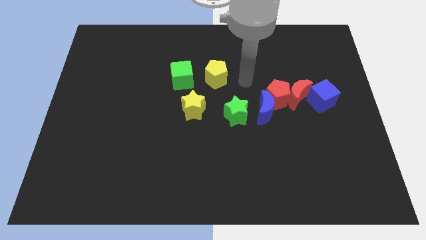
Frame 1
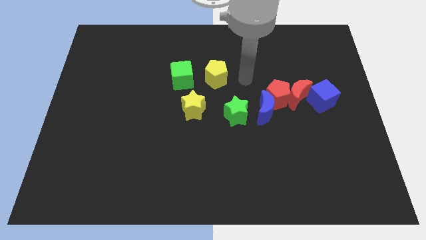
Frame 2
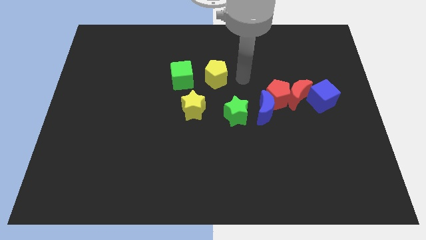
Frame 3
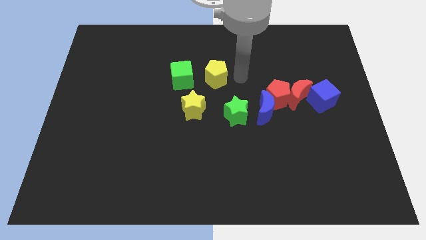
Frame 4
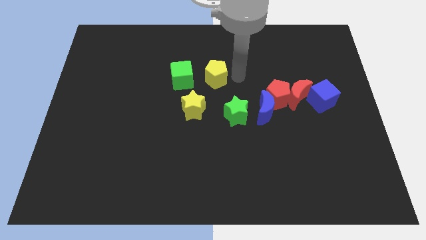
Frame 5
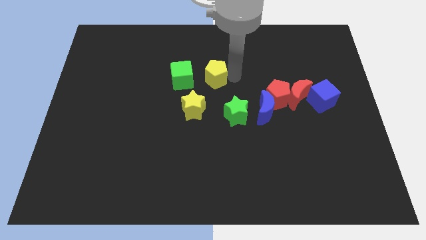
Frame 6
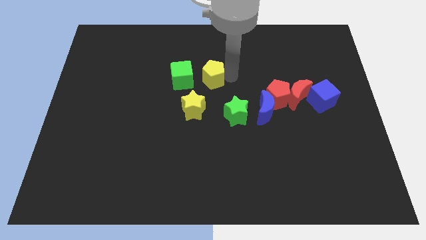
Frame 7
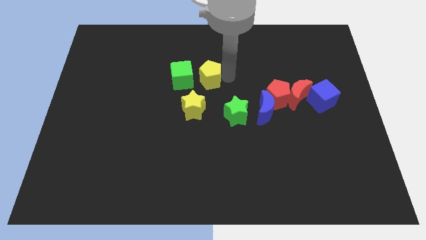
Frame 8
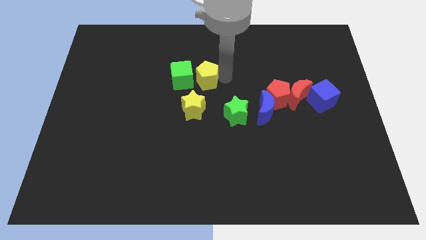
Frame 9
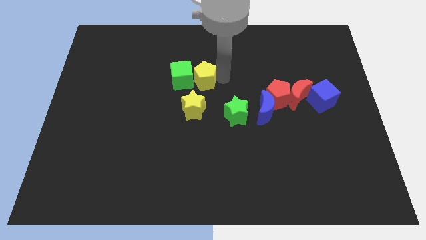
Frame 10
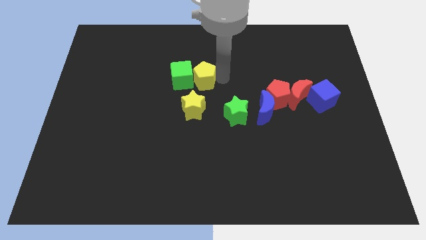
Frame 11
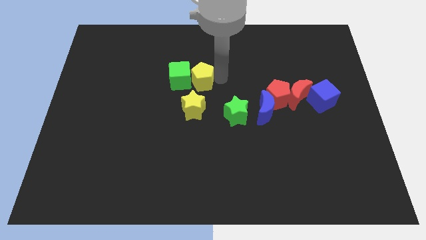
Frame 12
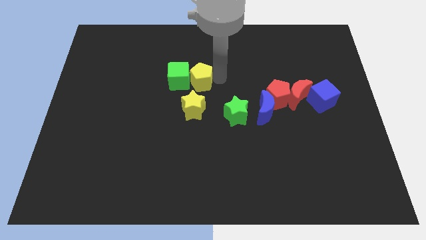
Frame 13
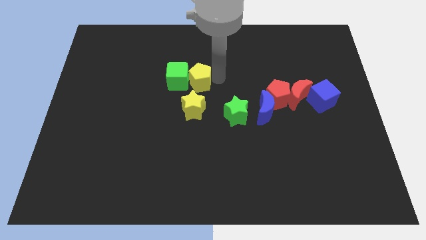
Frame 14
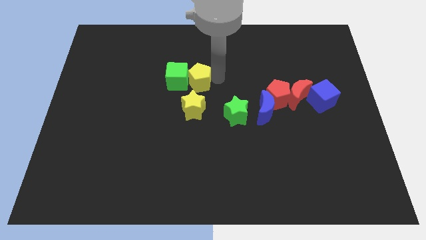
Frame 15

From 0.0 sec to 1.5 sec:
move the yellow pentagon into the green cube

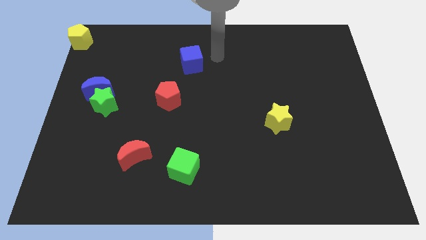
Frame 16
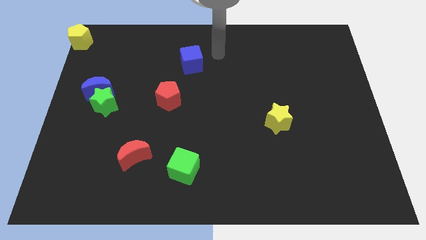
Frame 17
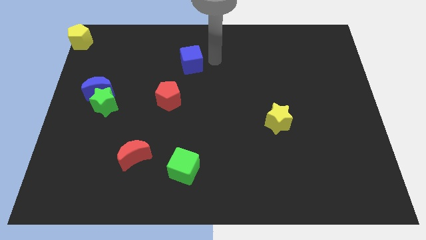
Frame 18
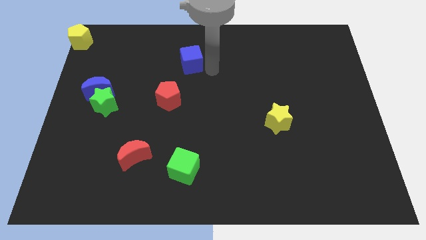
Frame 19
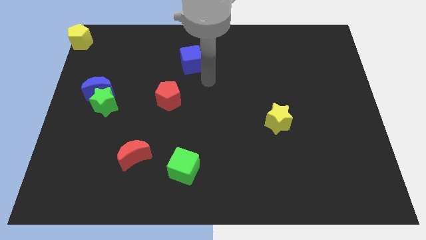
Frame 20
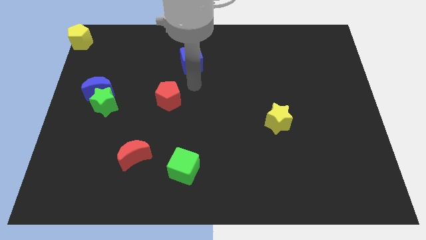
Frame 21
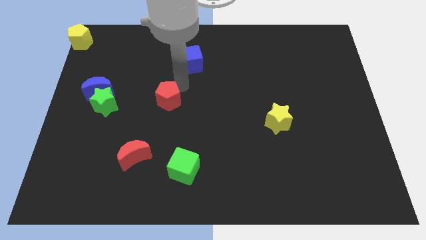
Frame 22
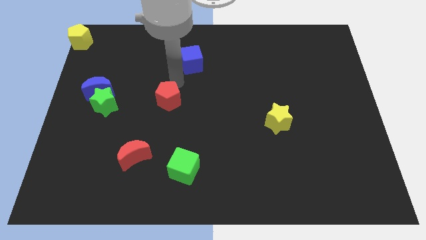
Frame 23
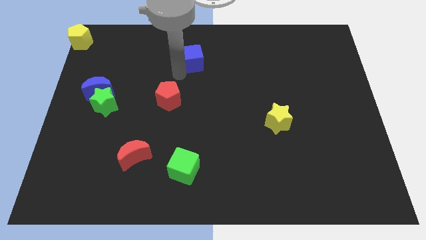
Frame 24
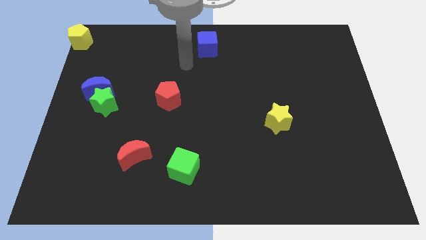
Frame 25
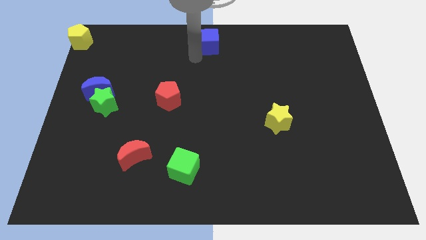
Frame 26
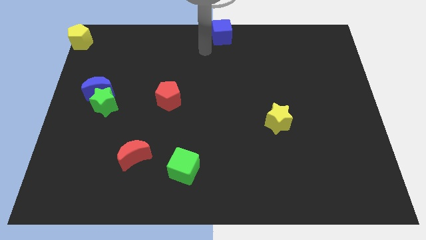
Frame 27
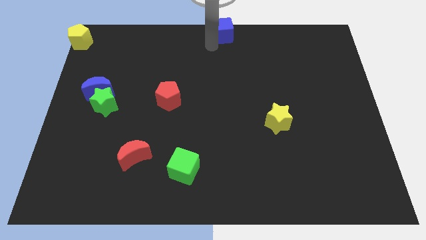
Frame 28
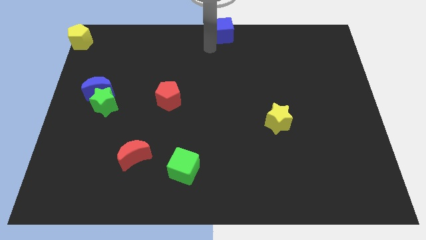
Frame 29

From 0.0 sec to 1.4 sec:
place the blue cube at the top center of the board

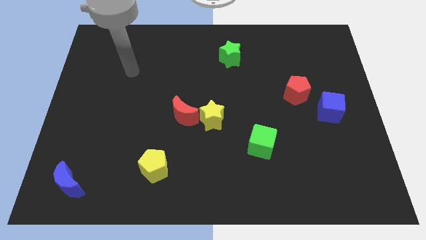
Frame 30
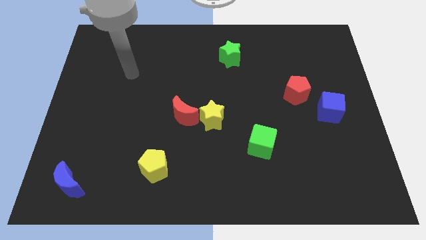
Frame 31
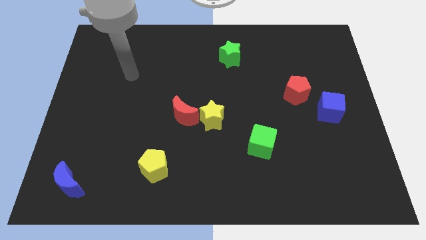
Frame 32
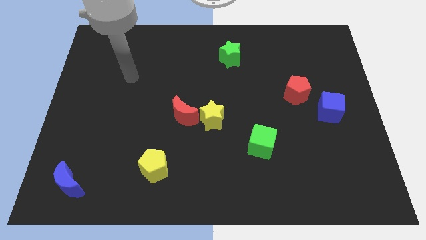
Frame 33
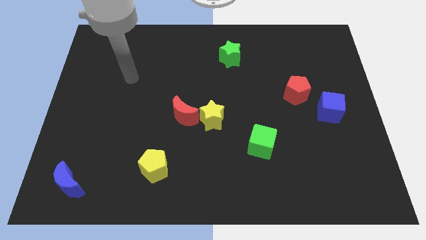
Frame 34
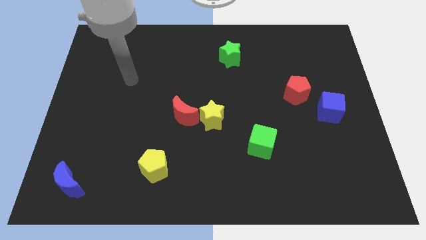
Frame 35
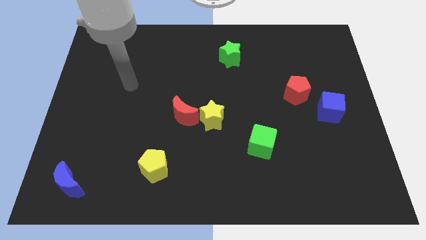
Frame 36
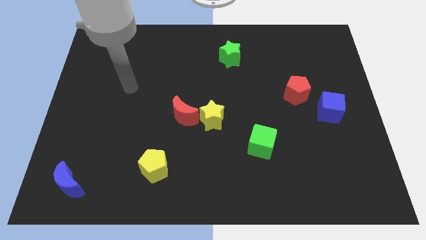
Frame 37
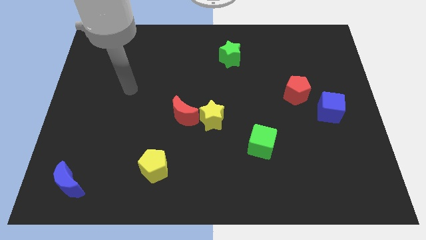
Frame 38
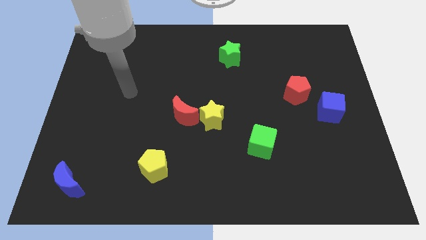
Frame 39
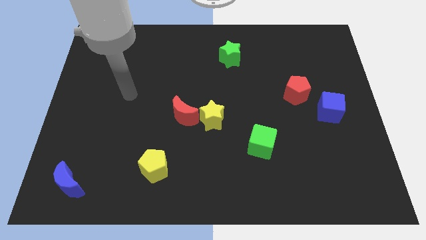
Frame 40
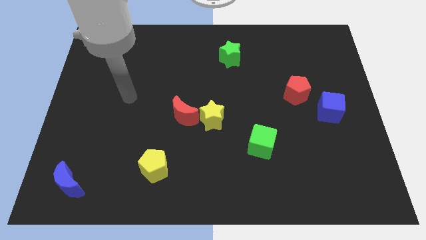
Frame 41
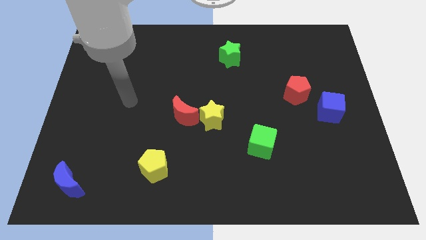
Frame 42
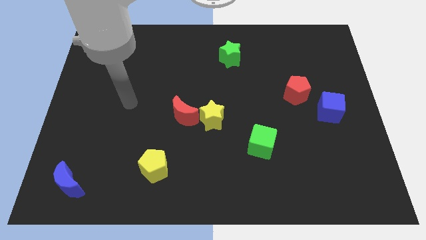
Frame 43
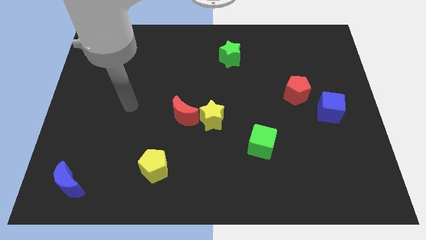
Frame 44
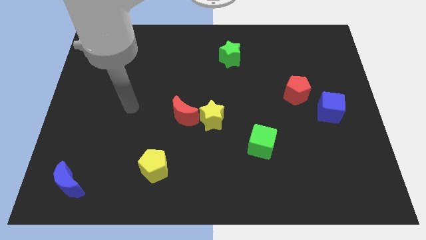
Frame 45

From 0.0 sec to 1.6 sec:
move your arm slightly towards down

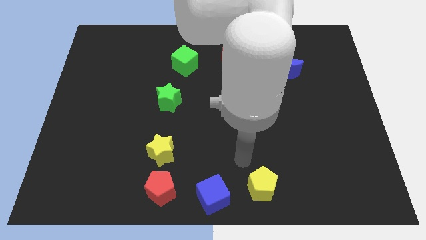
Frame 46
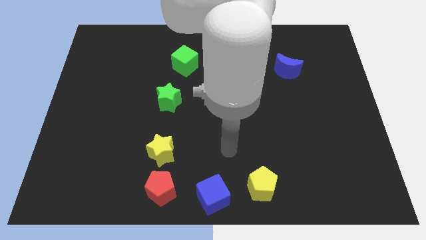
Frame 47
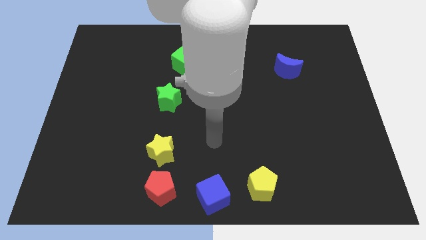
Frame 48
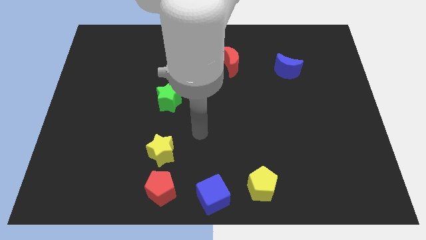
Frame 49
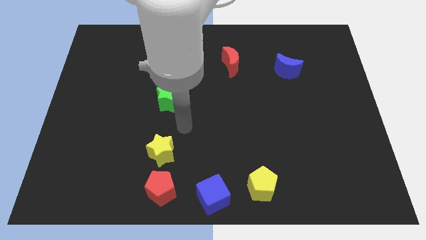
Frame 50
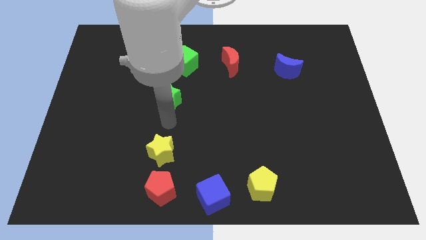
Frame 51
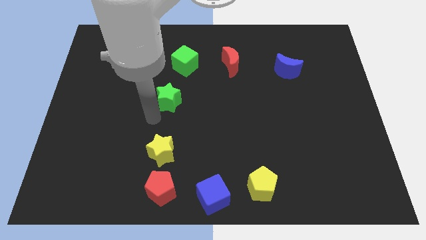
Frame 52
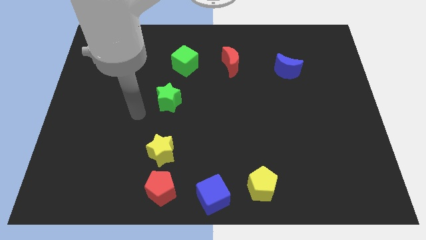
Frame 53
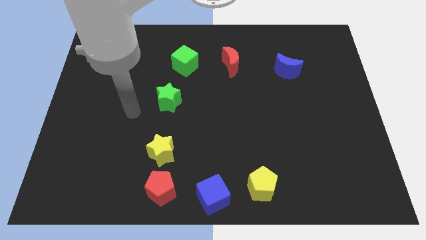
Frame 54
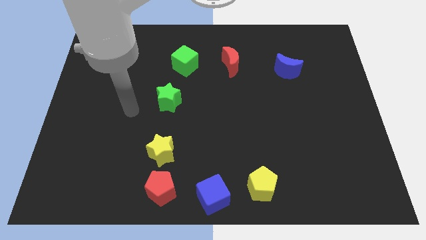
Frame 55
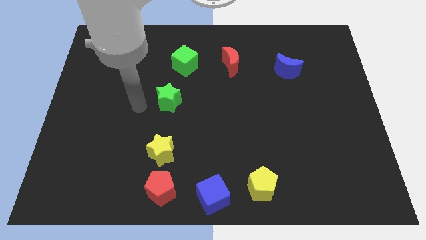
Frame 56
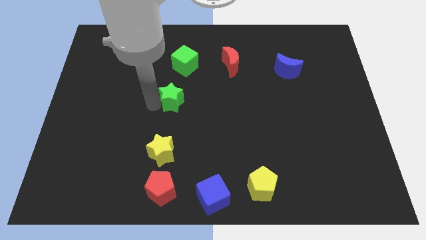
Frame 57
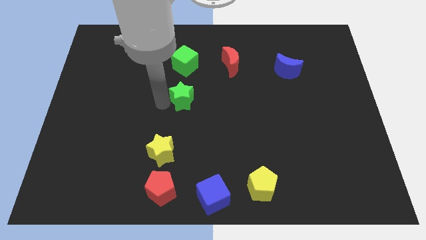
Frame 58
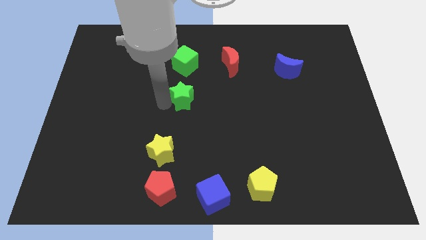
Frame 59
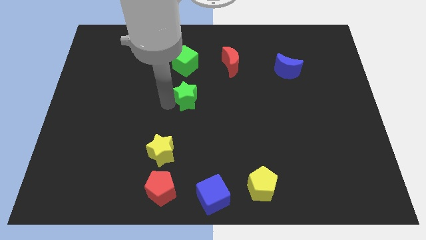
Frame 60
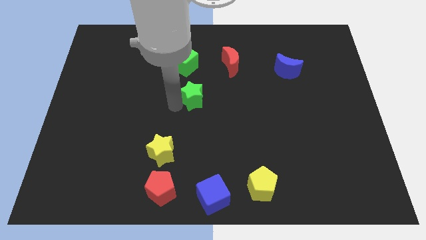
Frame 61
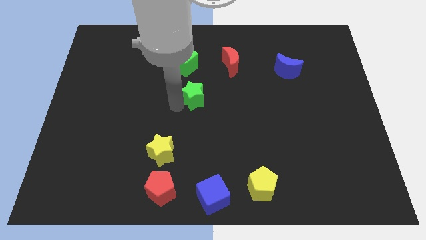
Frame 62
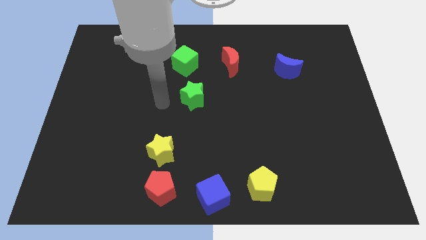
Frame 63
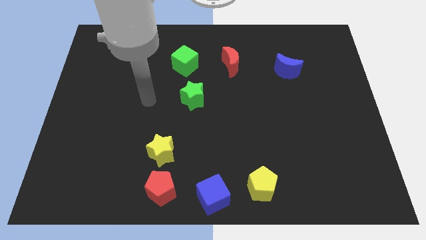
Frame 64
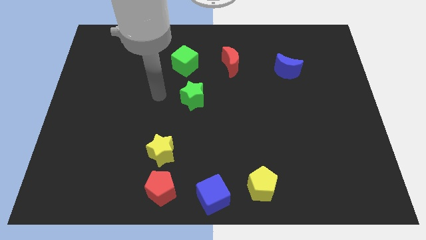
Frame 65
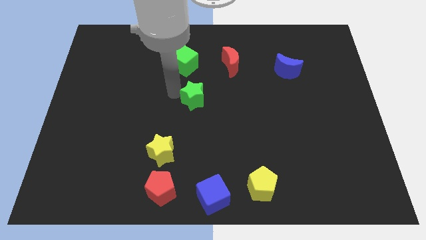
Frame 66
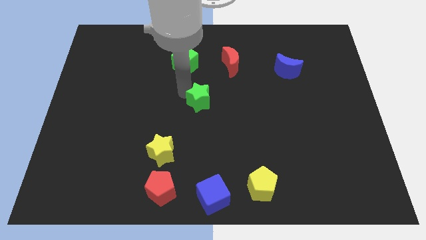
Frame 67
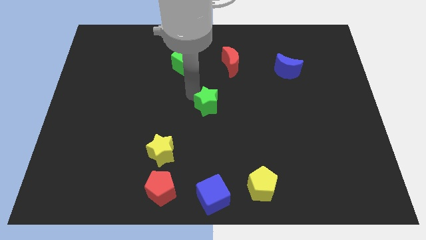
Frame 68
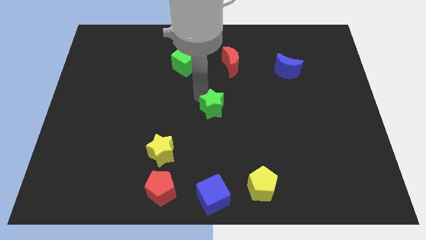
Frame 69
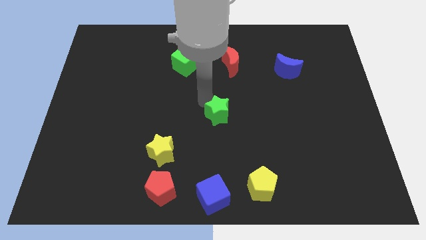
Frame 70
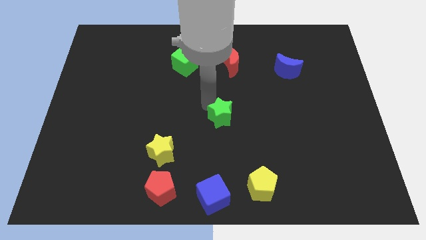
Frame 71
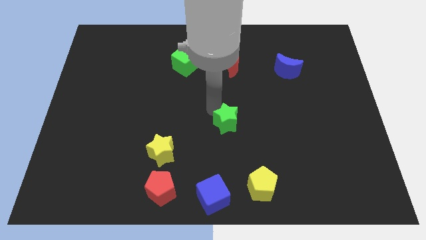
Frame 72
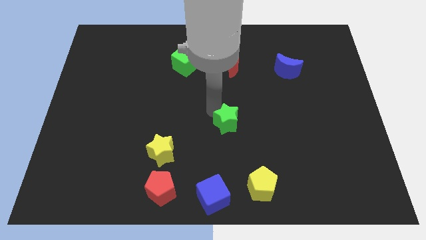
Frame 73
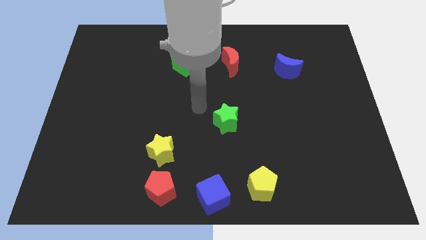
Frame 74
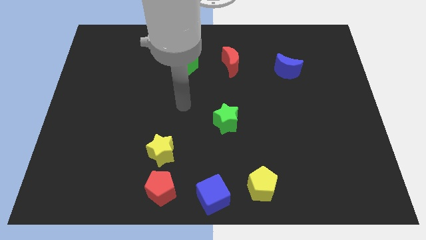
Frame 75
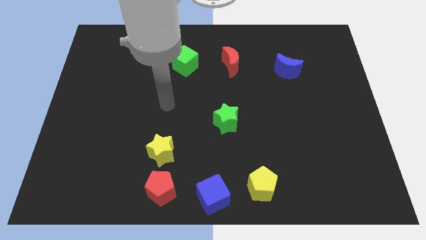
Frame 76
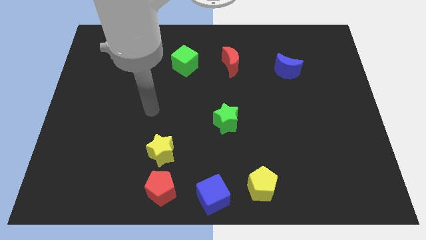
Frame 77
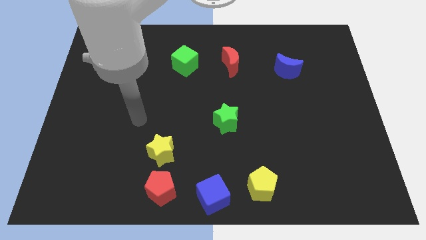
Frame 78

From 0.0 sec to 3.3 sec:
place green star at the center of the board

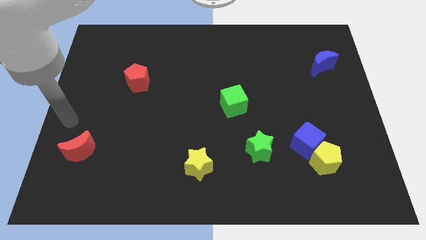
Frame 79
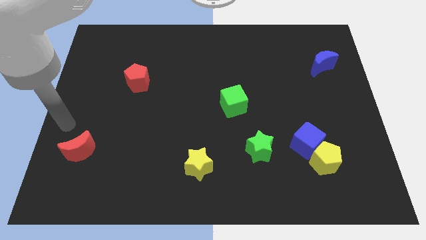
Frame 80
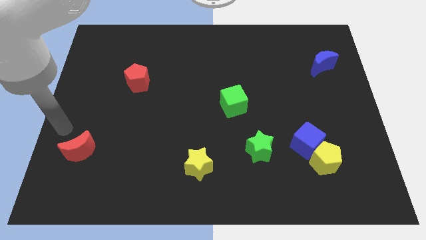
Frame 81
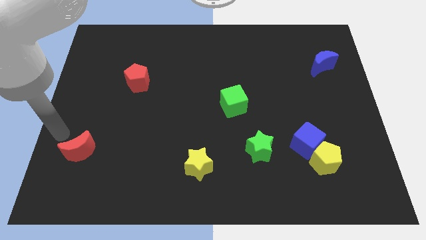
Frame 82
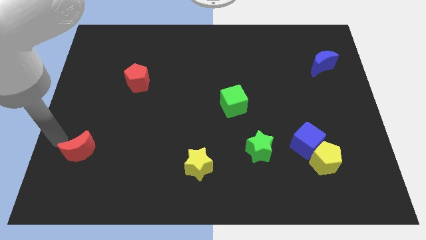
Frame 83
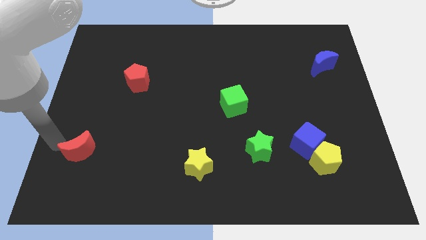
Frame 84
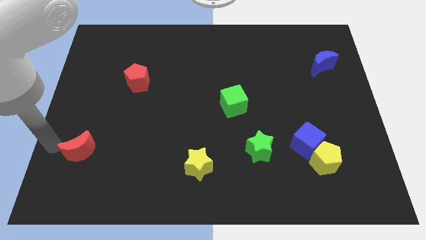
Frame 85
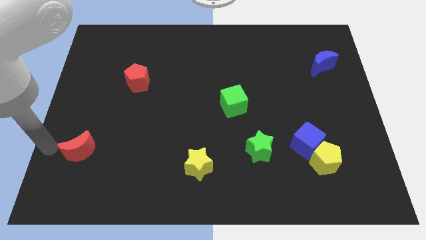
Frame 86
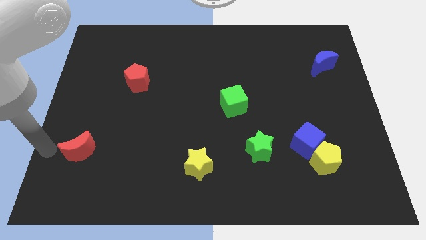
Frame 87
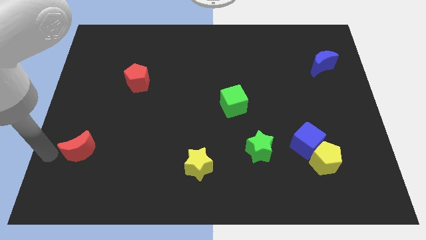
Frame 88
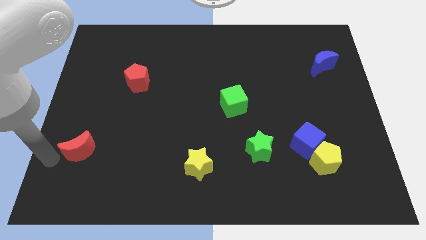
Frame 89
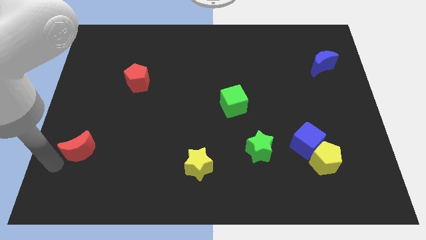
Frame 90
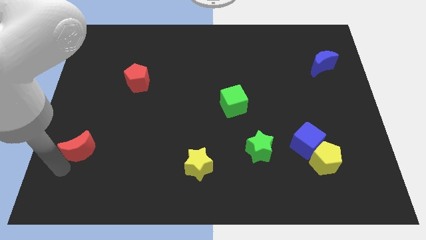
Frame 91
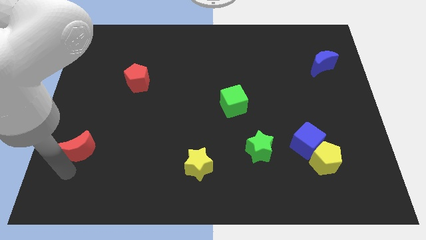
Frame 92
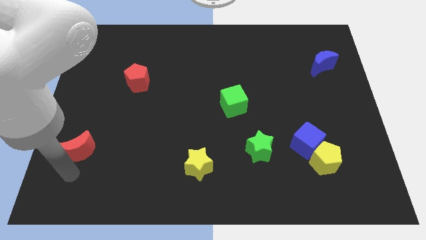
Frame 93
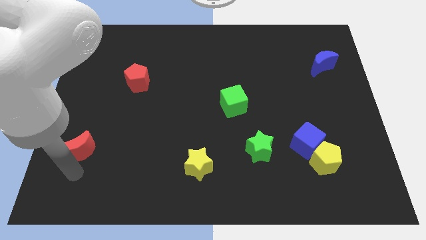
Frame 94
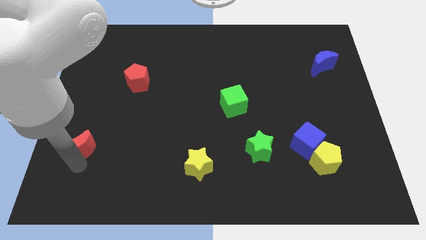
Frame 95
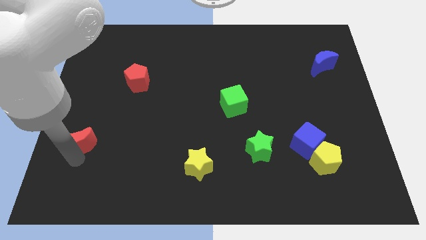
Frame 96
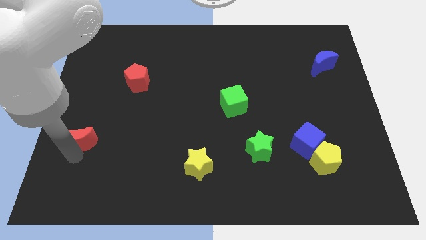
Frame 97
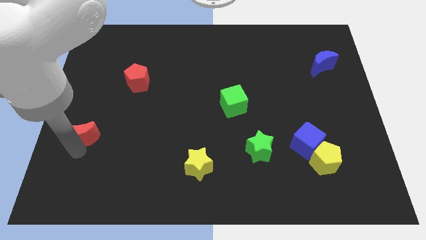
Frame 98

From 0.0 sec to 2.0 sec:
slide the red moon slightly to the top
